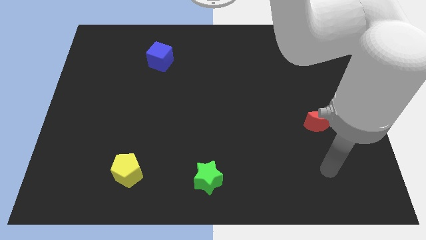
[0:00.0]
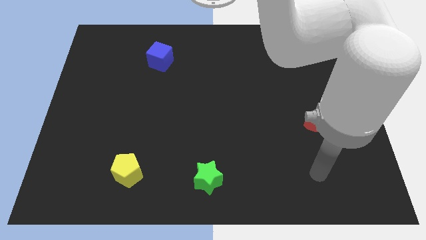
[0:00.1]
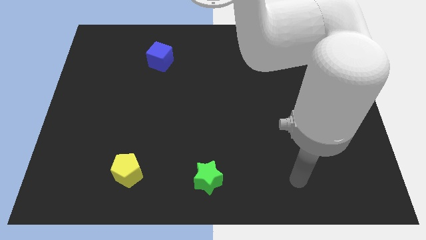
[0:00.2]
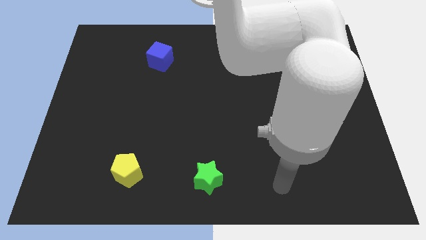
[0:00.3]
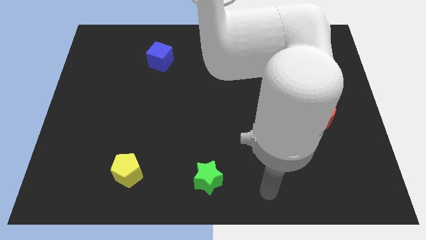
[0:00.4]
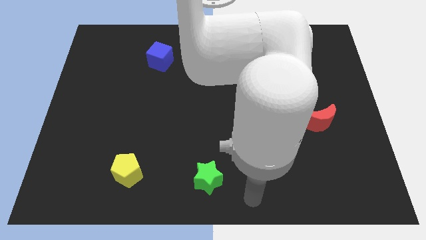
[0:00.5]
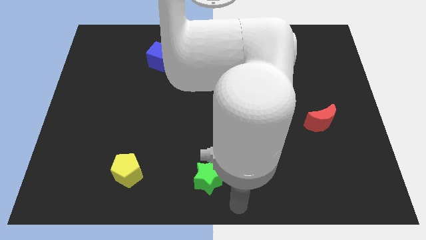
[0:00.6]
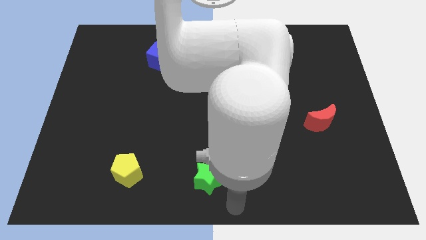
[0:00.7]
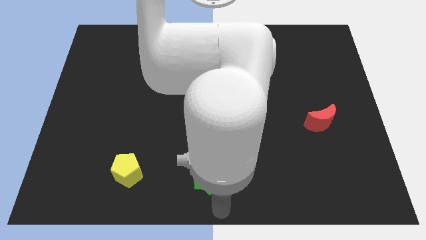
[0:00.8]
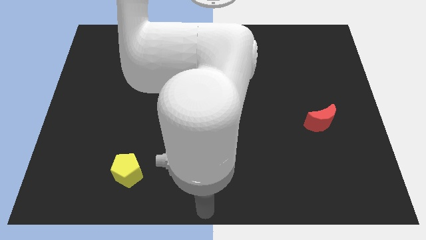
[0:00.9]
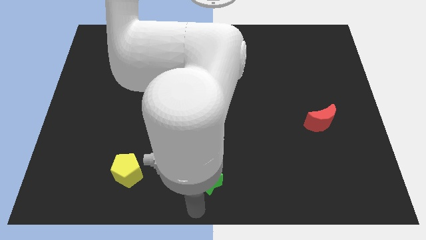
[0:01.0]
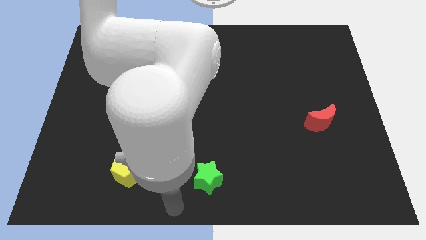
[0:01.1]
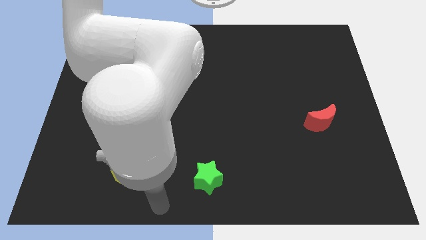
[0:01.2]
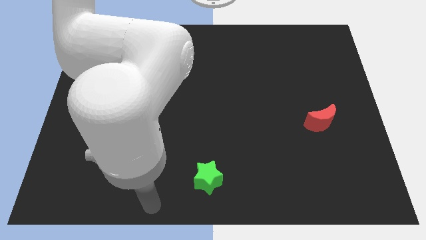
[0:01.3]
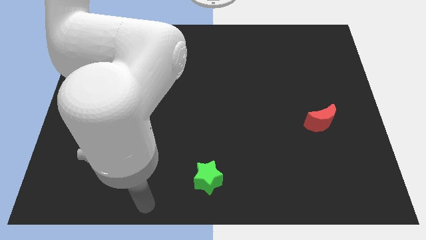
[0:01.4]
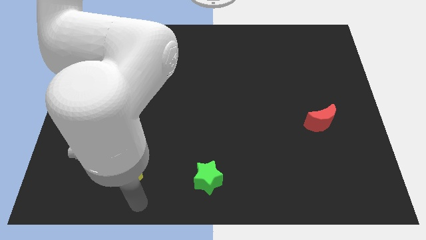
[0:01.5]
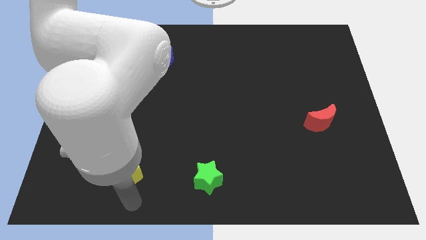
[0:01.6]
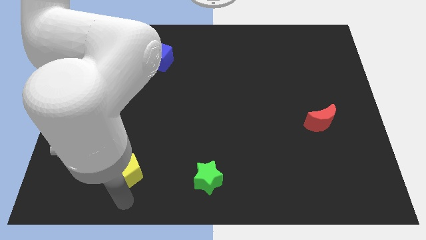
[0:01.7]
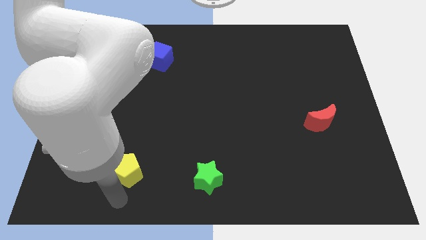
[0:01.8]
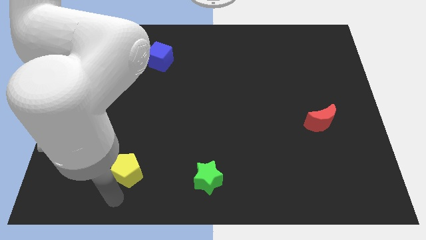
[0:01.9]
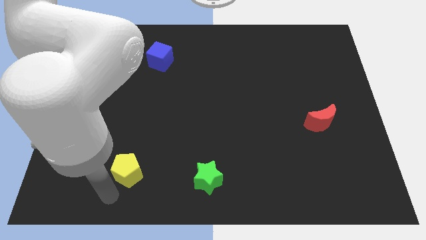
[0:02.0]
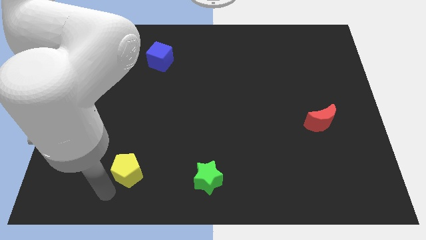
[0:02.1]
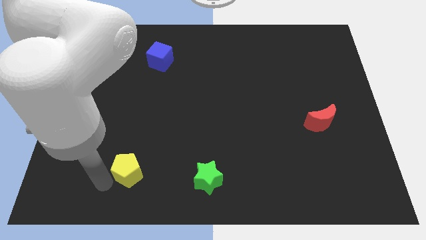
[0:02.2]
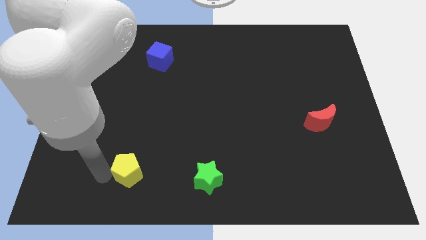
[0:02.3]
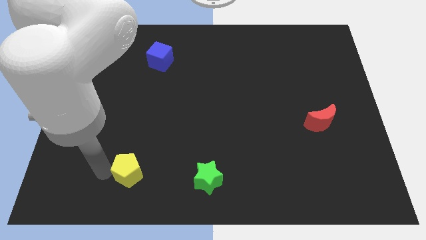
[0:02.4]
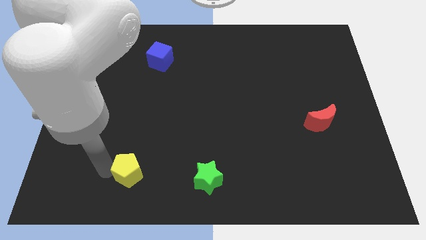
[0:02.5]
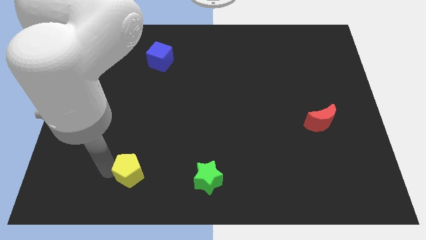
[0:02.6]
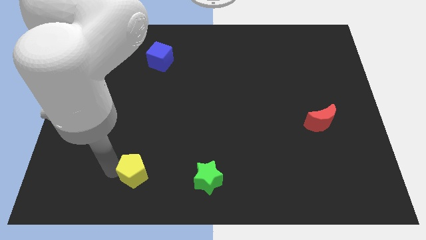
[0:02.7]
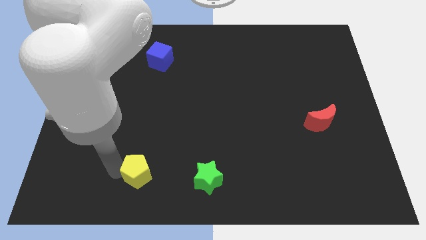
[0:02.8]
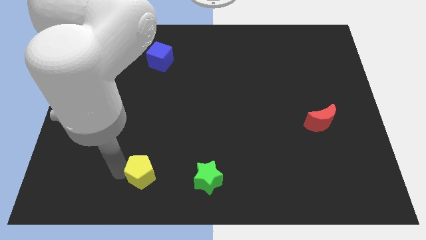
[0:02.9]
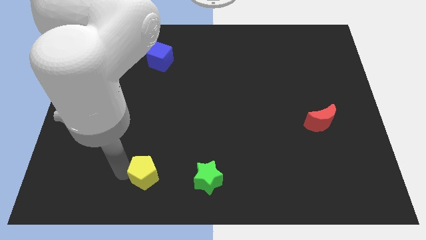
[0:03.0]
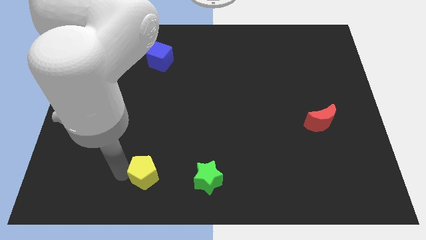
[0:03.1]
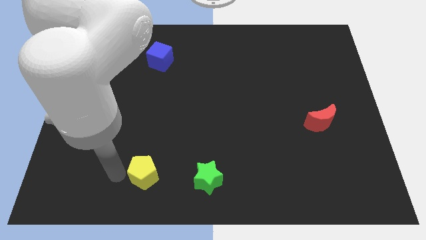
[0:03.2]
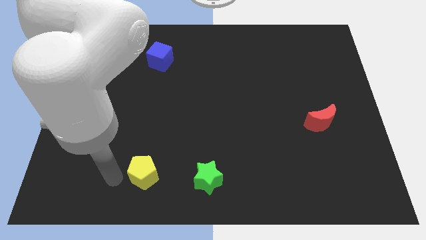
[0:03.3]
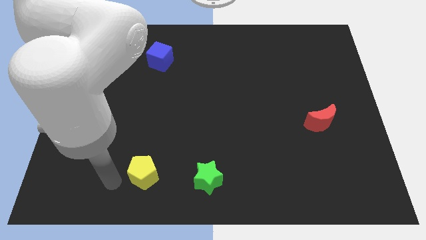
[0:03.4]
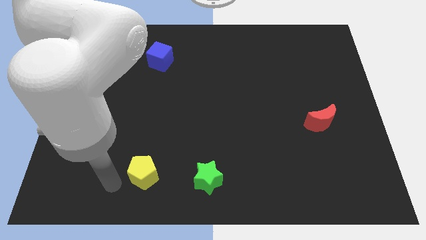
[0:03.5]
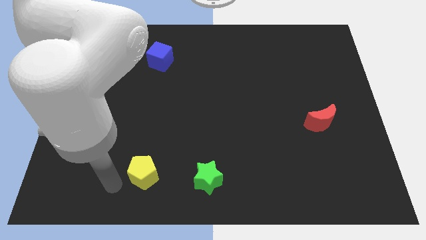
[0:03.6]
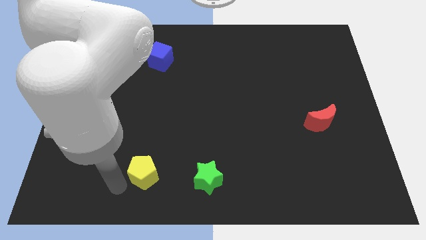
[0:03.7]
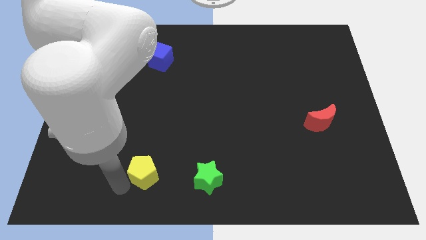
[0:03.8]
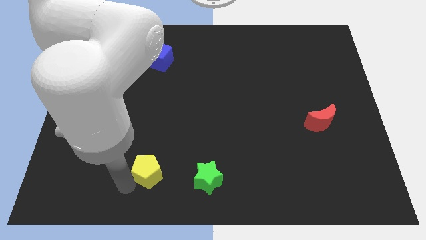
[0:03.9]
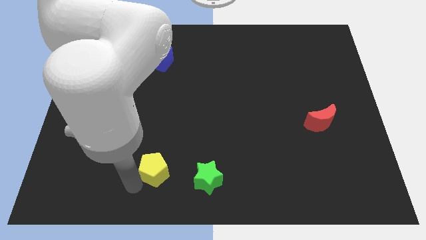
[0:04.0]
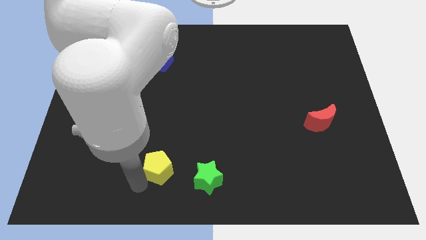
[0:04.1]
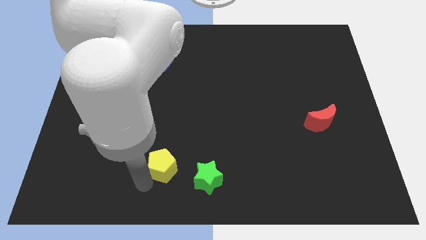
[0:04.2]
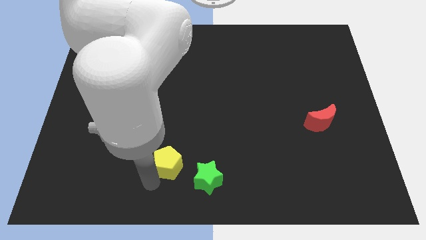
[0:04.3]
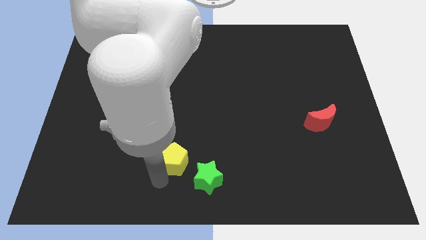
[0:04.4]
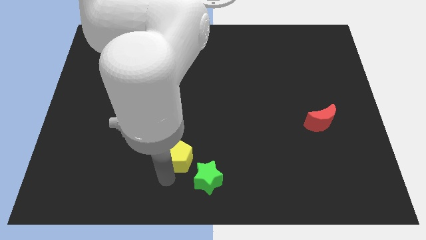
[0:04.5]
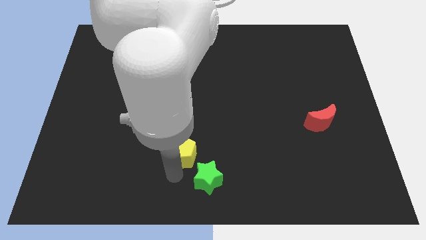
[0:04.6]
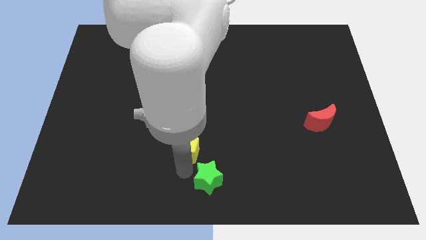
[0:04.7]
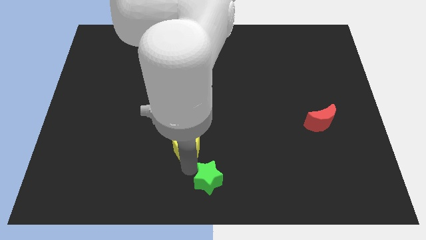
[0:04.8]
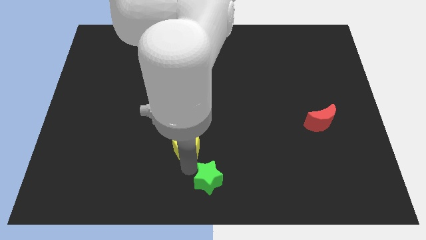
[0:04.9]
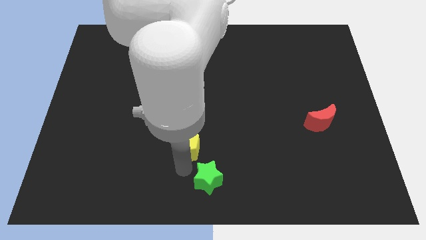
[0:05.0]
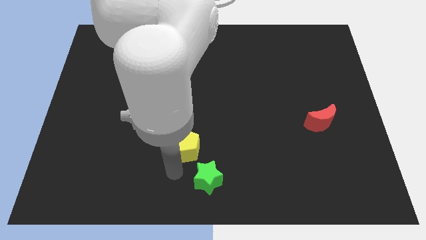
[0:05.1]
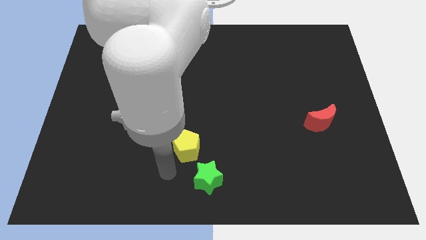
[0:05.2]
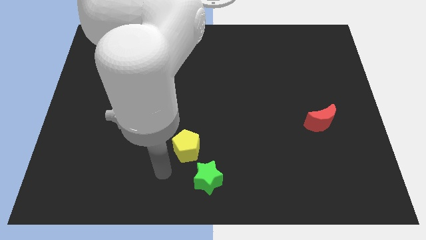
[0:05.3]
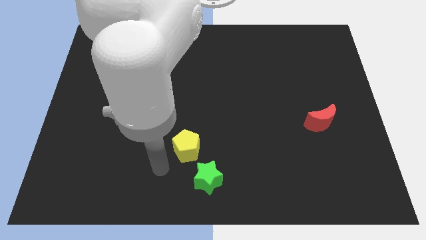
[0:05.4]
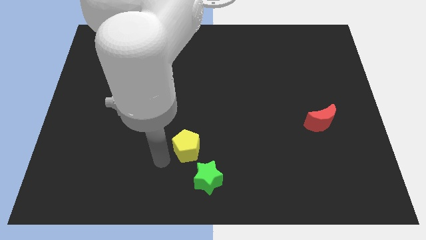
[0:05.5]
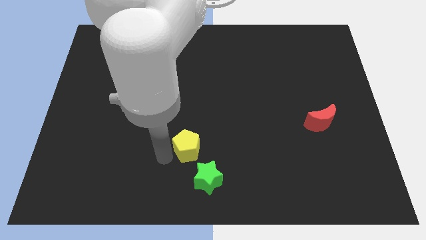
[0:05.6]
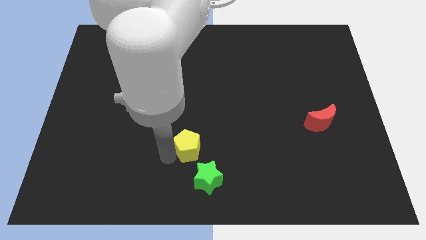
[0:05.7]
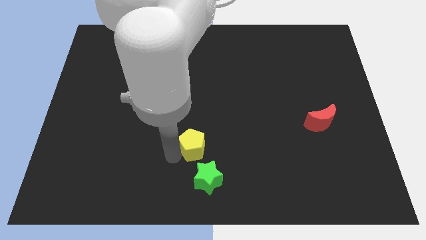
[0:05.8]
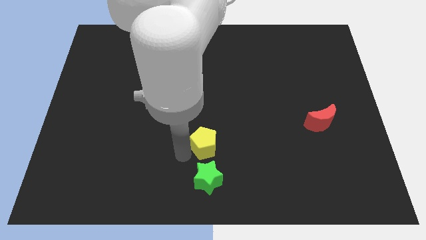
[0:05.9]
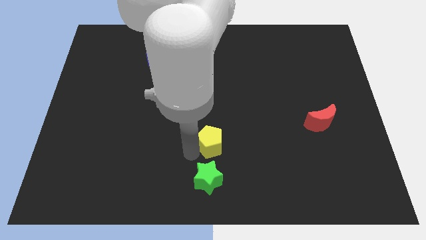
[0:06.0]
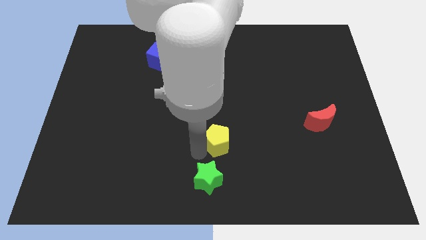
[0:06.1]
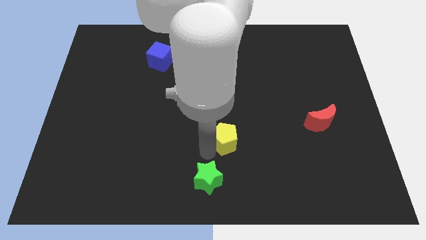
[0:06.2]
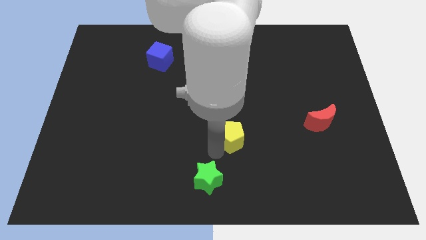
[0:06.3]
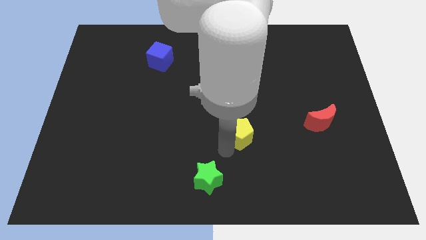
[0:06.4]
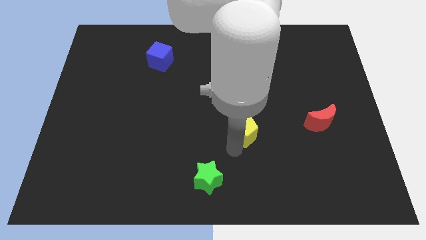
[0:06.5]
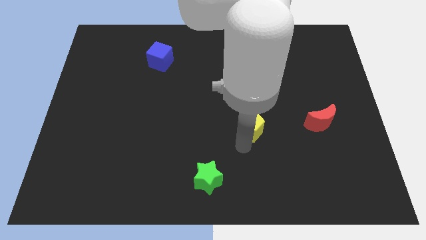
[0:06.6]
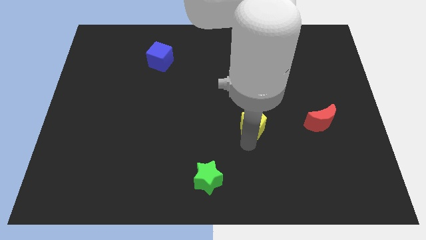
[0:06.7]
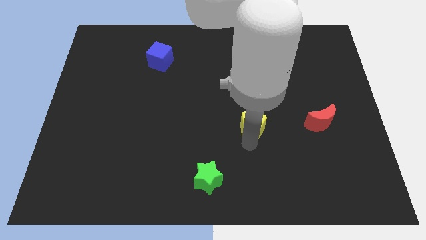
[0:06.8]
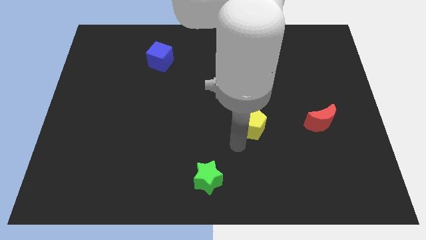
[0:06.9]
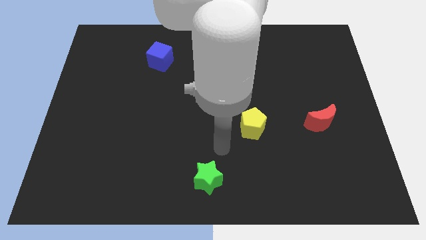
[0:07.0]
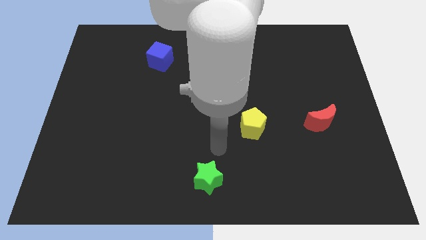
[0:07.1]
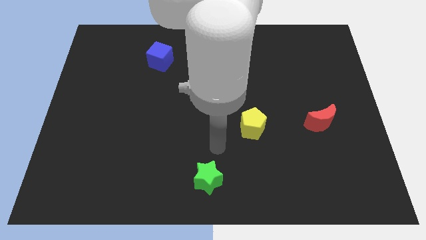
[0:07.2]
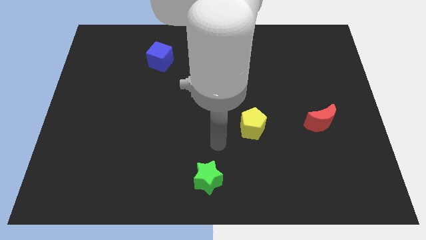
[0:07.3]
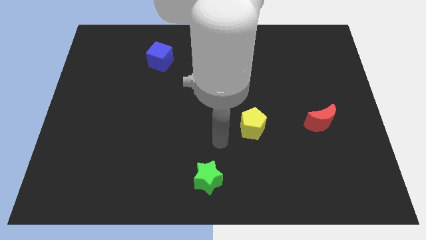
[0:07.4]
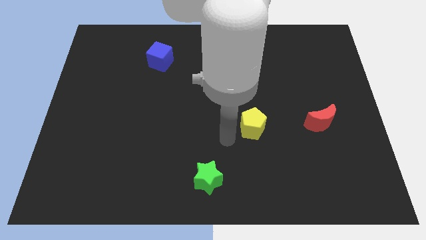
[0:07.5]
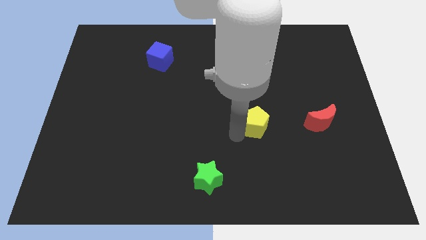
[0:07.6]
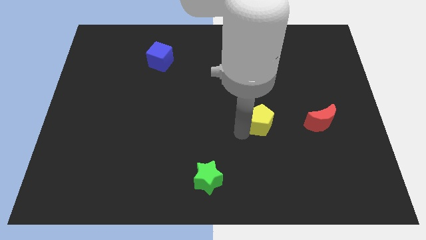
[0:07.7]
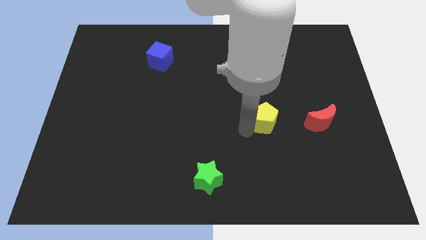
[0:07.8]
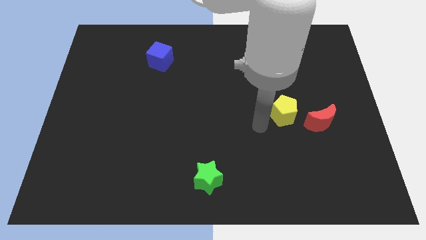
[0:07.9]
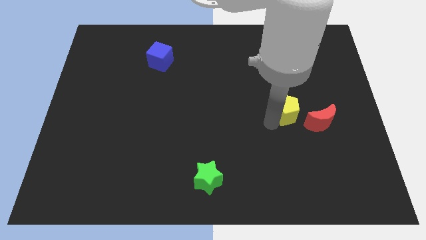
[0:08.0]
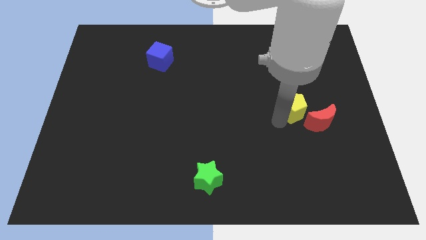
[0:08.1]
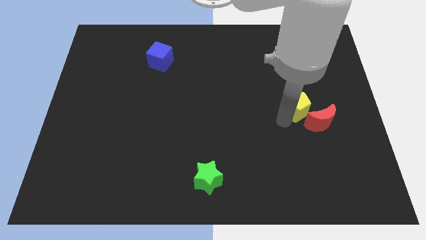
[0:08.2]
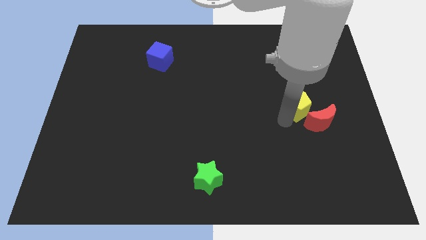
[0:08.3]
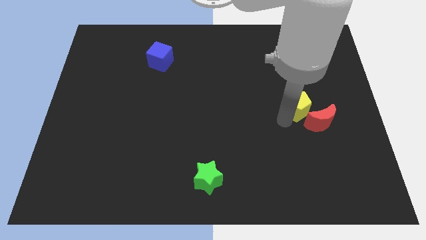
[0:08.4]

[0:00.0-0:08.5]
put the pentagon towards the moon

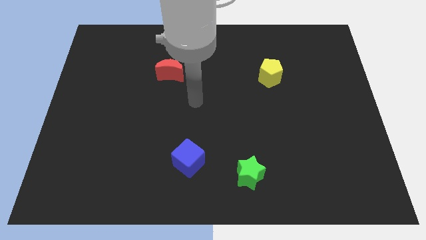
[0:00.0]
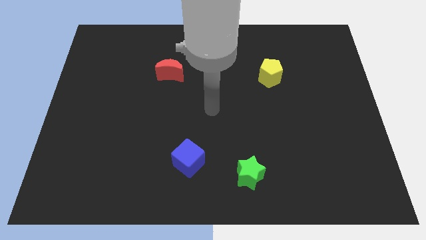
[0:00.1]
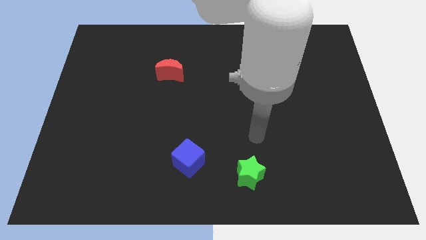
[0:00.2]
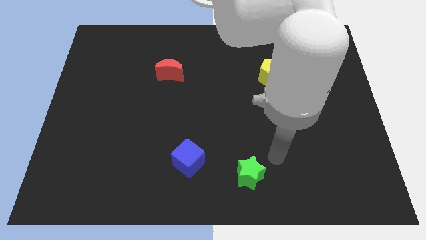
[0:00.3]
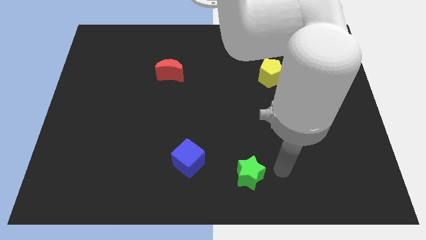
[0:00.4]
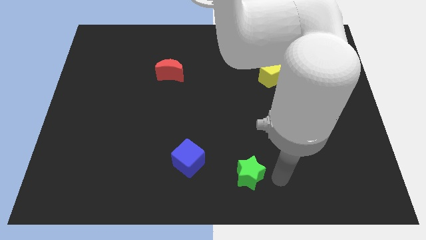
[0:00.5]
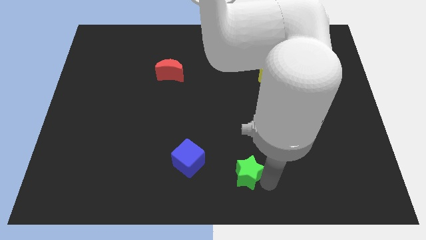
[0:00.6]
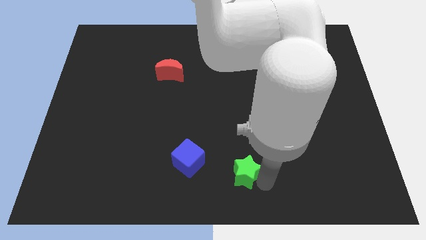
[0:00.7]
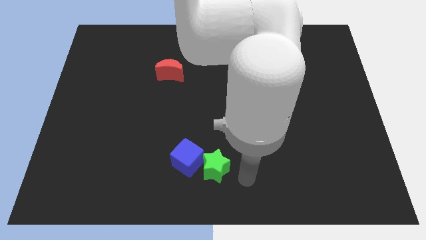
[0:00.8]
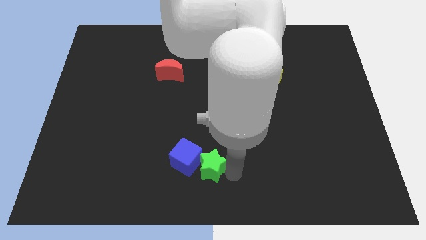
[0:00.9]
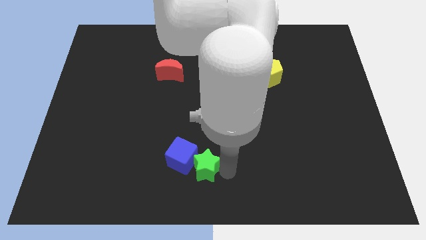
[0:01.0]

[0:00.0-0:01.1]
put the green star to the cube
